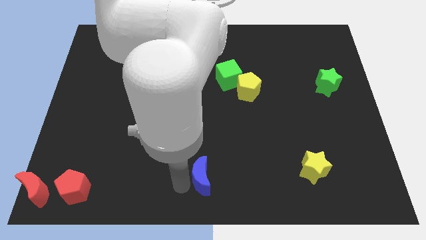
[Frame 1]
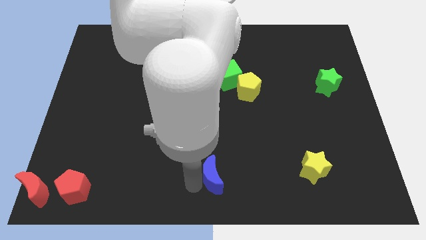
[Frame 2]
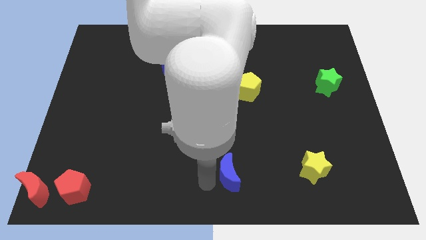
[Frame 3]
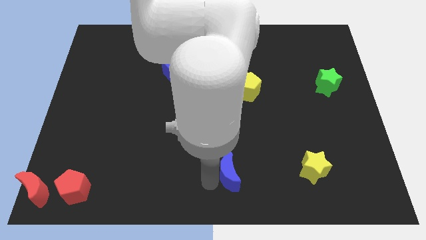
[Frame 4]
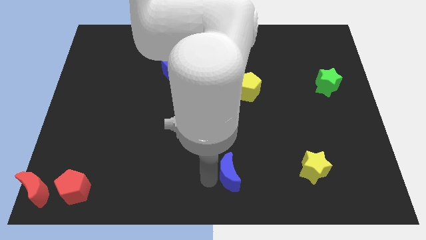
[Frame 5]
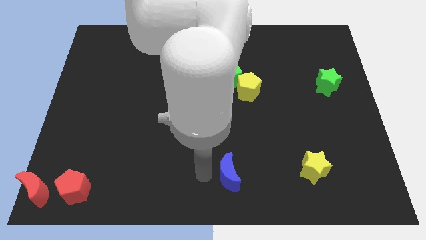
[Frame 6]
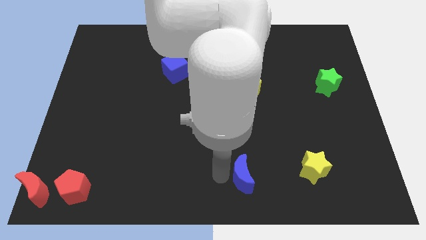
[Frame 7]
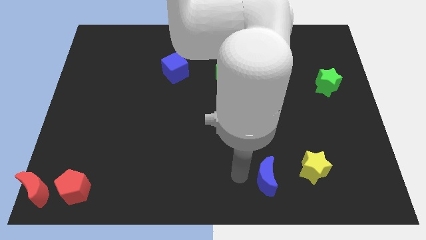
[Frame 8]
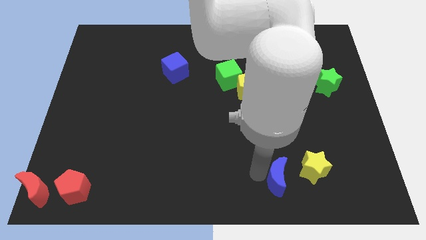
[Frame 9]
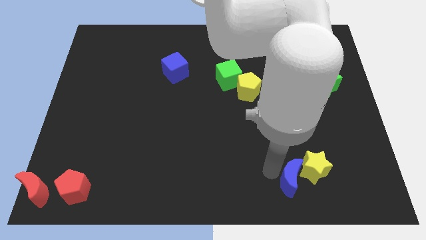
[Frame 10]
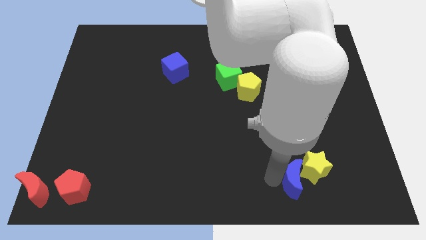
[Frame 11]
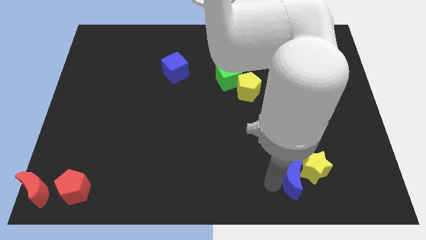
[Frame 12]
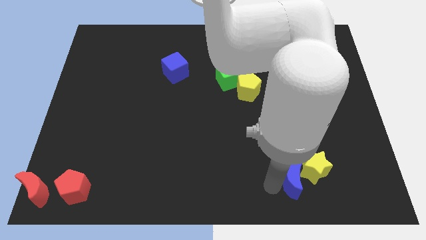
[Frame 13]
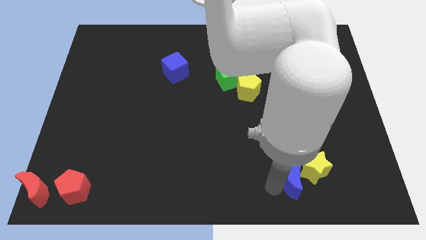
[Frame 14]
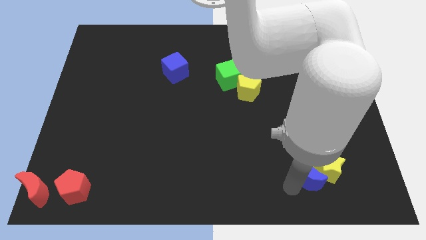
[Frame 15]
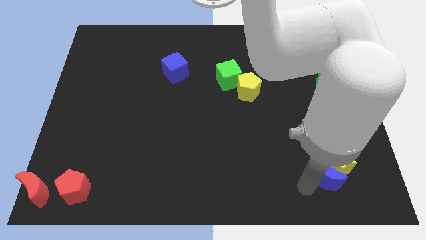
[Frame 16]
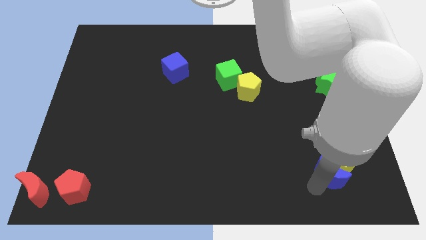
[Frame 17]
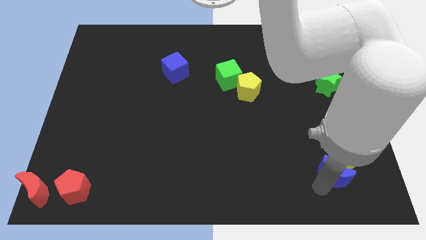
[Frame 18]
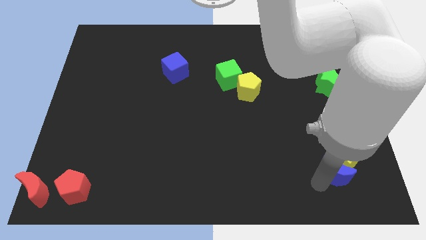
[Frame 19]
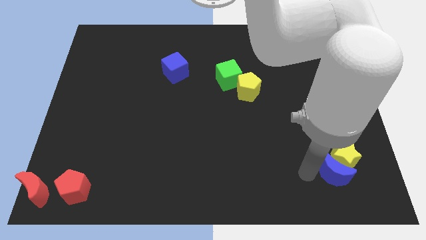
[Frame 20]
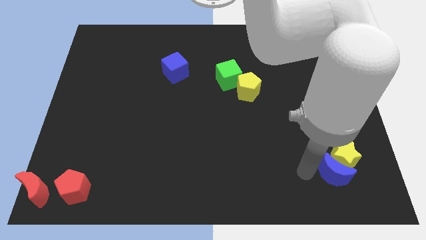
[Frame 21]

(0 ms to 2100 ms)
push the yellow star with the blue crescent towards the bottom right of the board

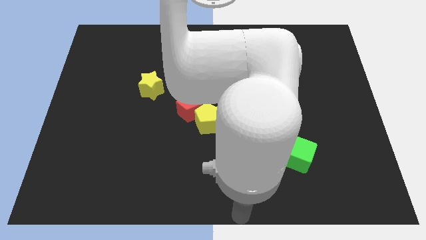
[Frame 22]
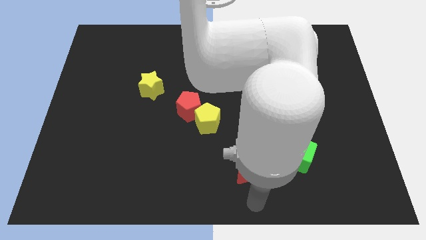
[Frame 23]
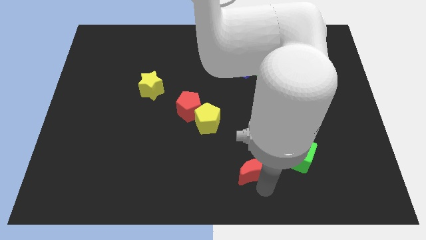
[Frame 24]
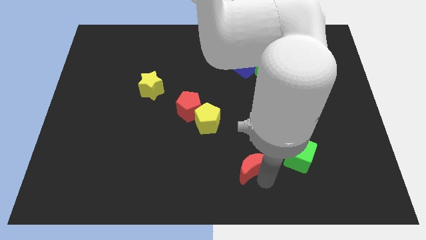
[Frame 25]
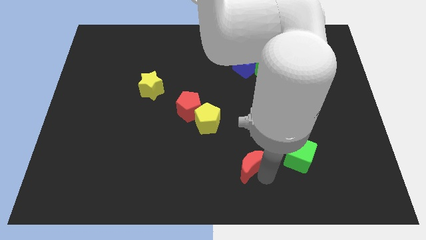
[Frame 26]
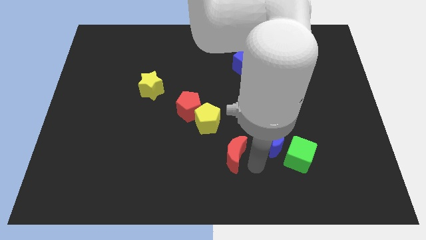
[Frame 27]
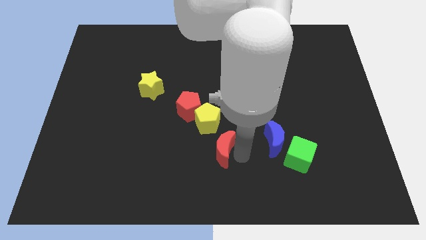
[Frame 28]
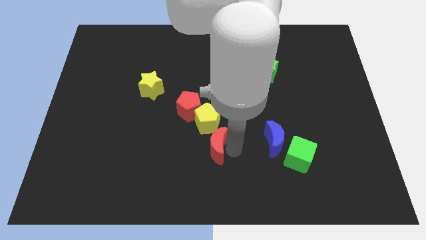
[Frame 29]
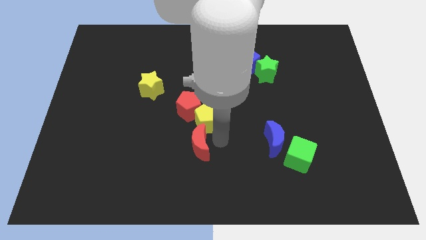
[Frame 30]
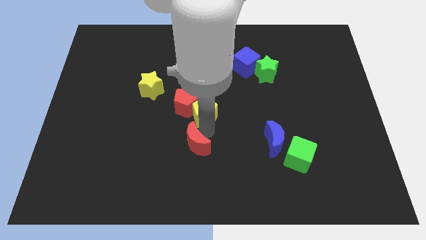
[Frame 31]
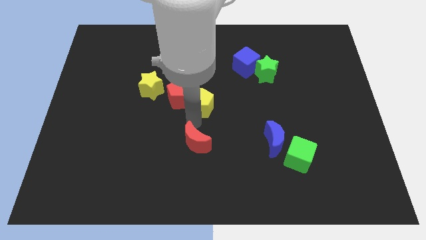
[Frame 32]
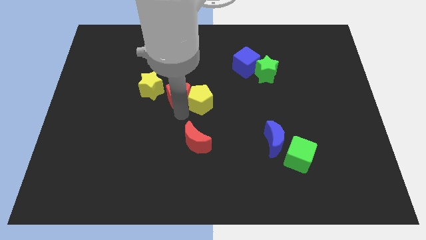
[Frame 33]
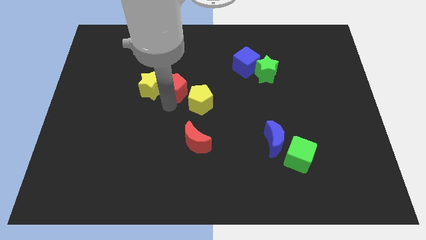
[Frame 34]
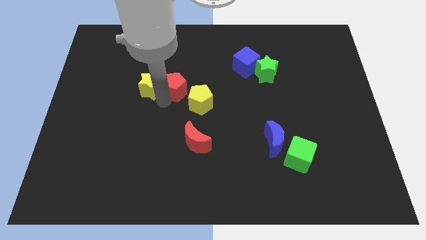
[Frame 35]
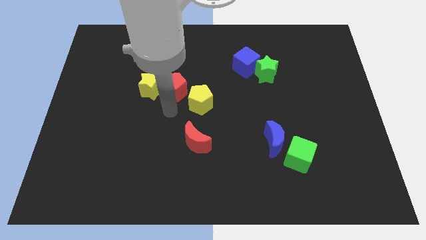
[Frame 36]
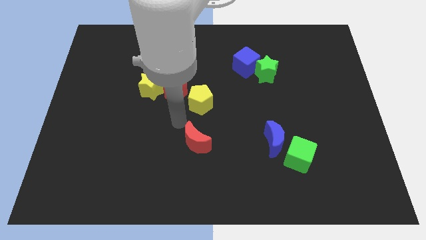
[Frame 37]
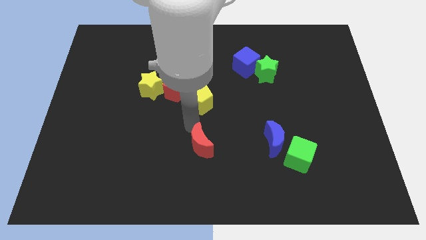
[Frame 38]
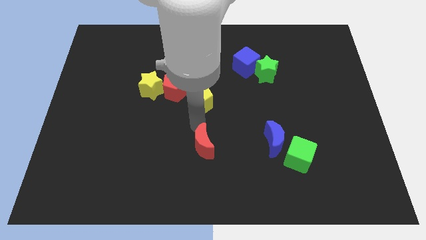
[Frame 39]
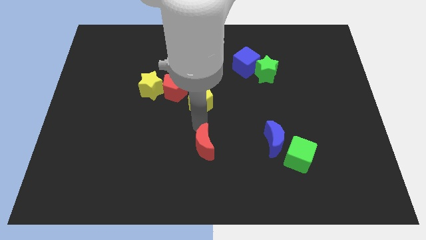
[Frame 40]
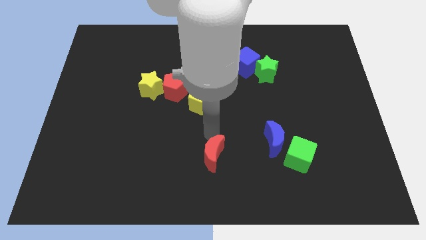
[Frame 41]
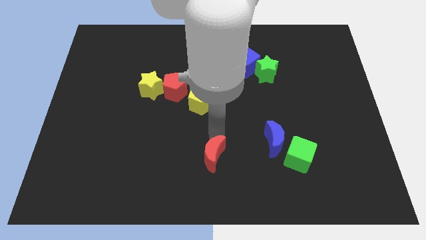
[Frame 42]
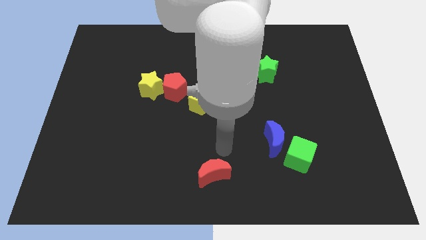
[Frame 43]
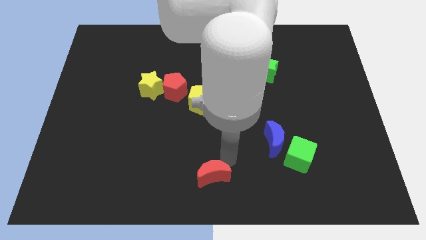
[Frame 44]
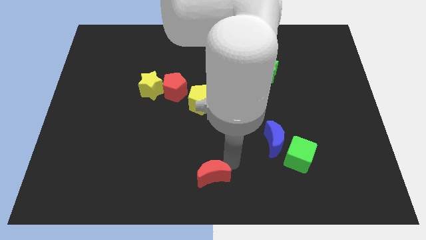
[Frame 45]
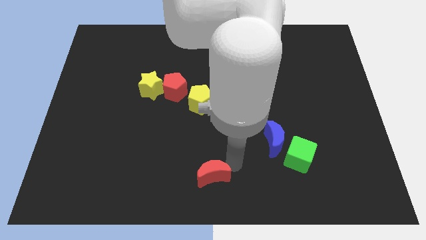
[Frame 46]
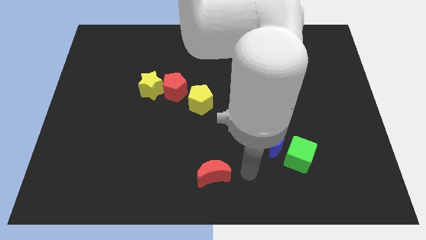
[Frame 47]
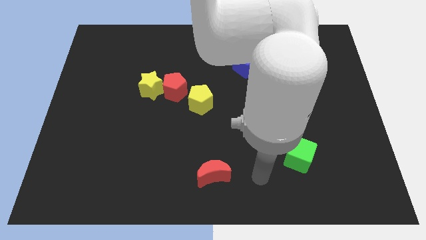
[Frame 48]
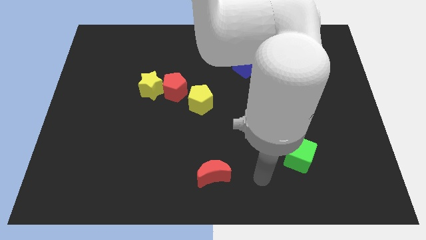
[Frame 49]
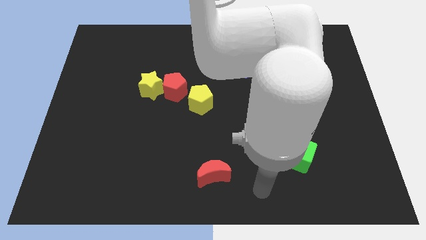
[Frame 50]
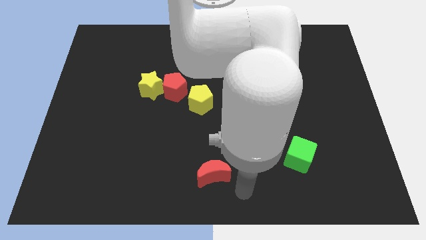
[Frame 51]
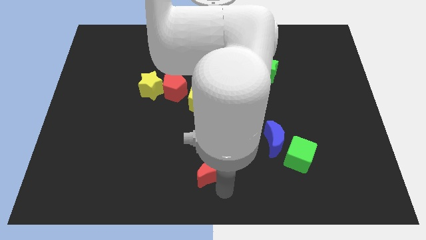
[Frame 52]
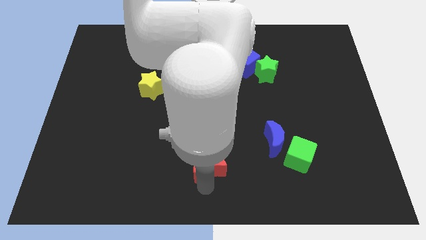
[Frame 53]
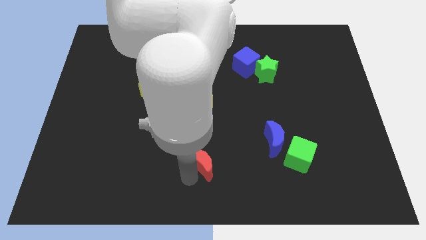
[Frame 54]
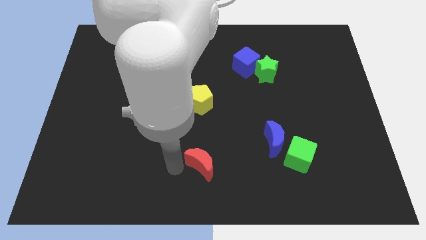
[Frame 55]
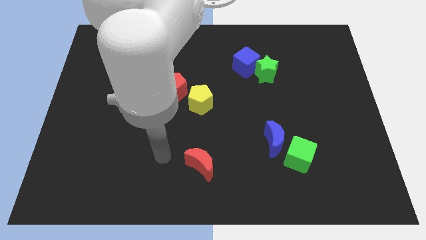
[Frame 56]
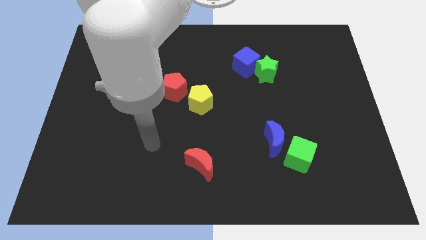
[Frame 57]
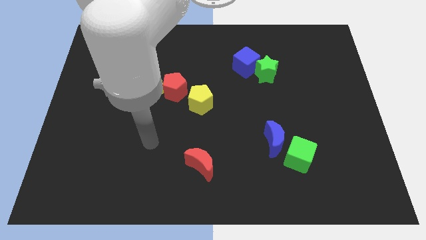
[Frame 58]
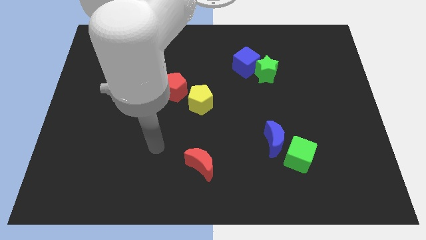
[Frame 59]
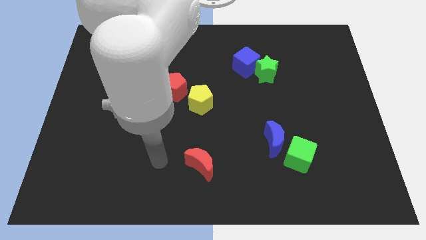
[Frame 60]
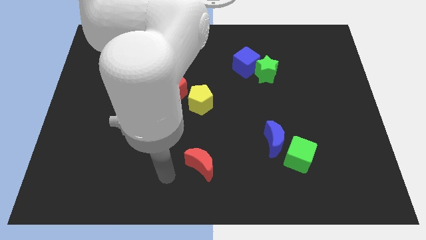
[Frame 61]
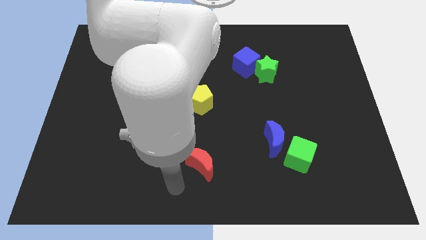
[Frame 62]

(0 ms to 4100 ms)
push red moon vertical to yellow pentagon

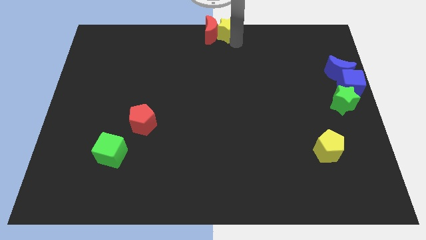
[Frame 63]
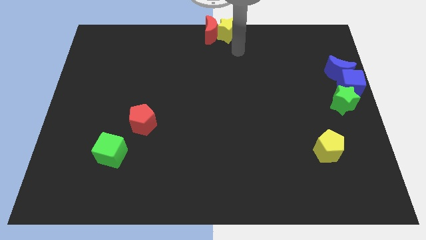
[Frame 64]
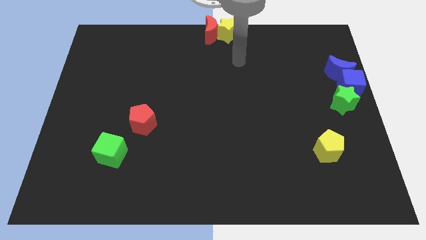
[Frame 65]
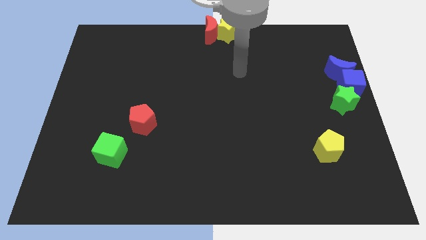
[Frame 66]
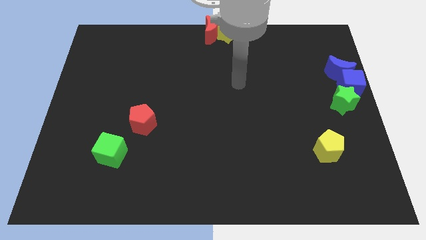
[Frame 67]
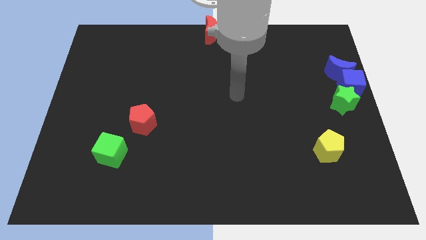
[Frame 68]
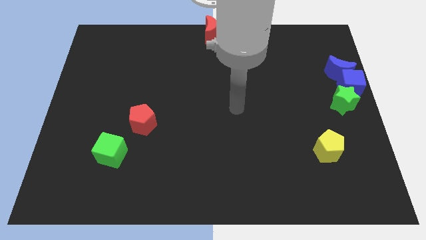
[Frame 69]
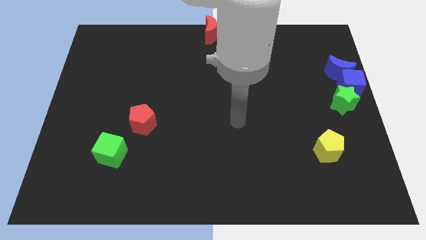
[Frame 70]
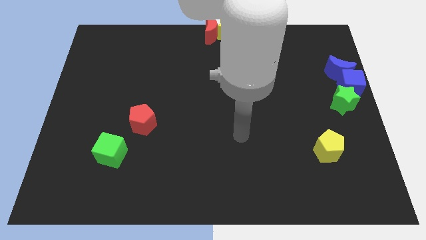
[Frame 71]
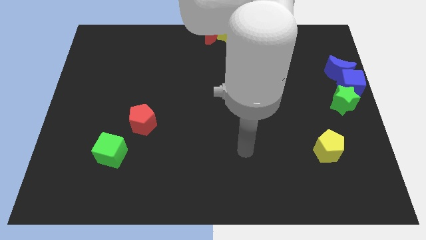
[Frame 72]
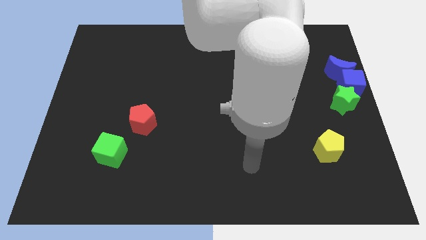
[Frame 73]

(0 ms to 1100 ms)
move your arm towards the bottom side of the board

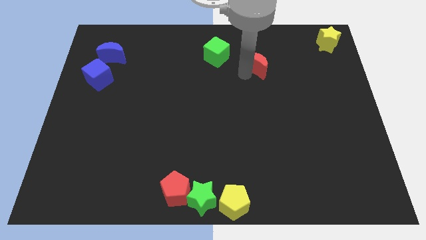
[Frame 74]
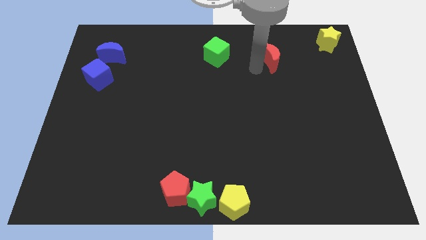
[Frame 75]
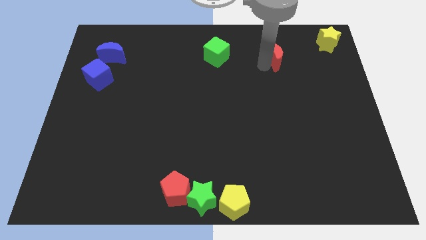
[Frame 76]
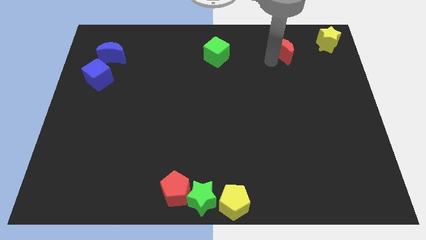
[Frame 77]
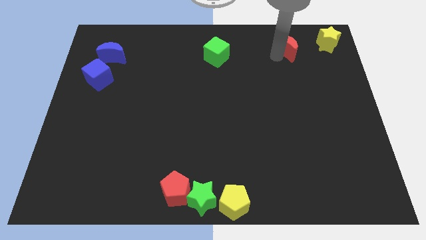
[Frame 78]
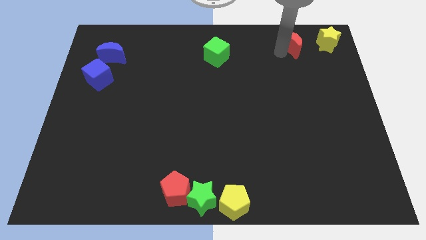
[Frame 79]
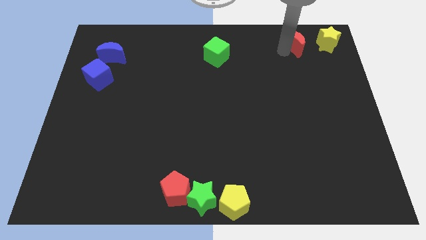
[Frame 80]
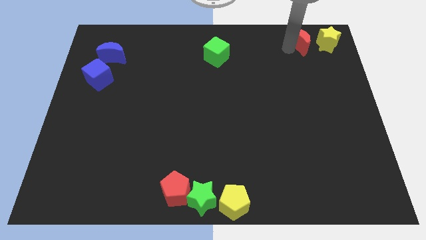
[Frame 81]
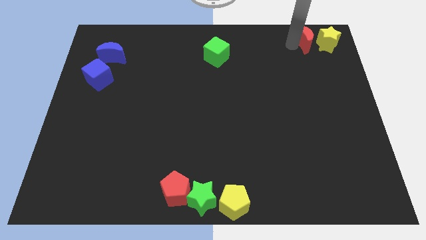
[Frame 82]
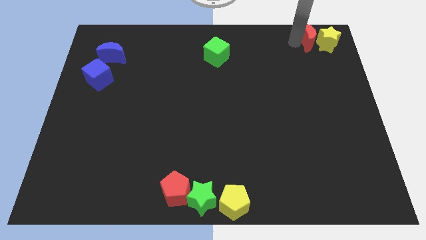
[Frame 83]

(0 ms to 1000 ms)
push red moon to the top right corner beside yellow star

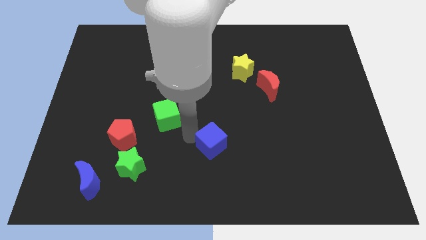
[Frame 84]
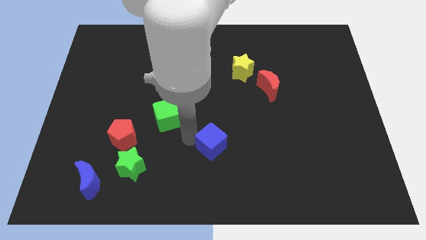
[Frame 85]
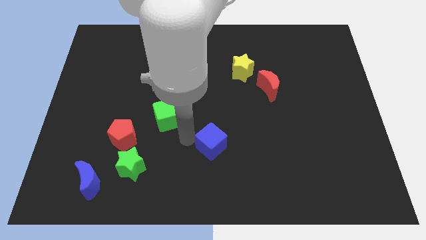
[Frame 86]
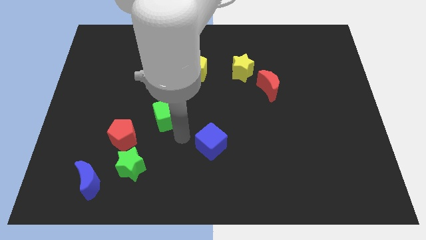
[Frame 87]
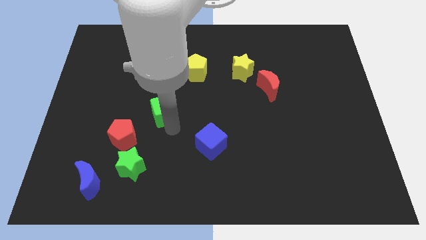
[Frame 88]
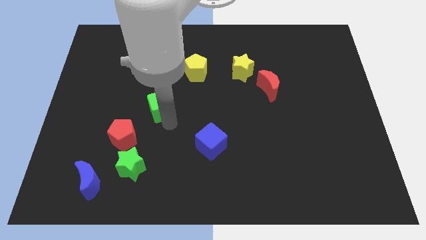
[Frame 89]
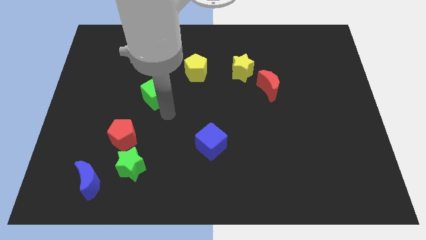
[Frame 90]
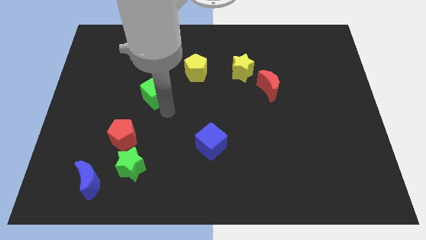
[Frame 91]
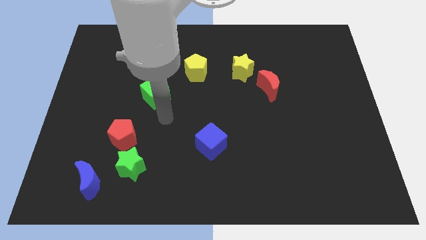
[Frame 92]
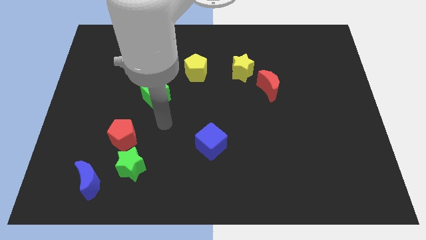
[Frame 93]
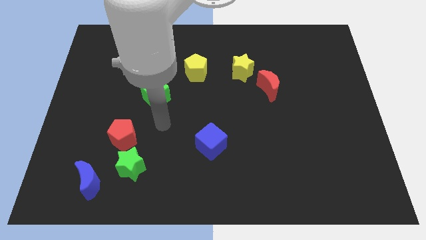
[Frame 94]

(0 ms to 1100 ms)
push the green cube between the yellow pentagon and red pentagon
